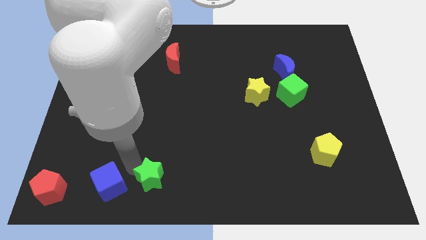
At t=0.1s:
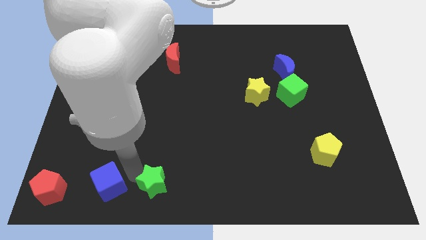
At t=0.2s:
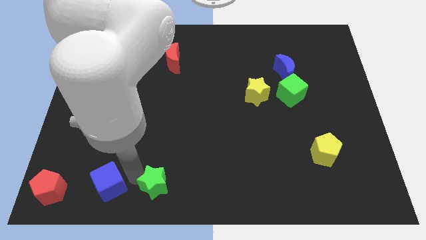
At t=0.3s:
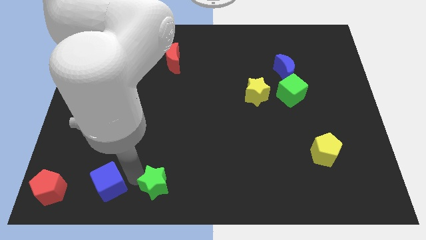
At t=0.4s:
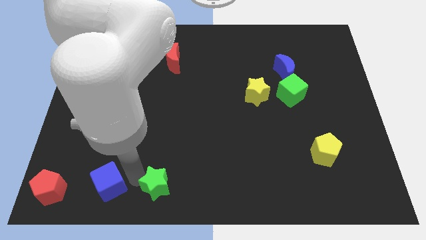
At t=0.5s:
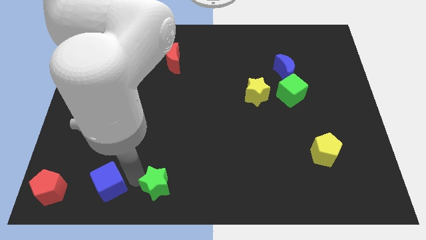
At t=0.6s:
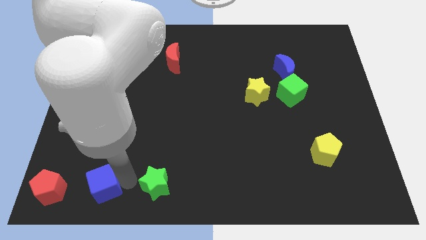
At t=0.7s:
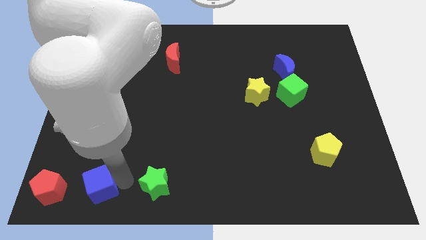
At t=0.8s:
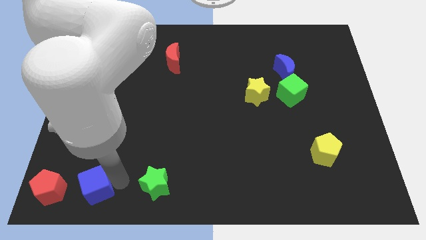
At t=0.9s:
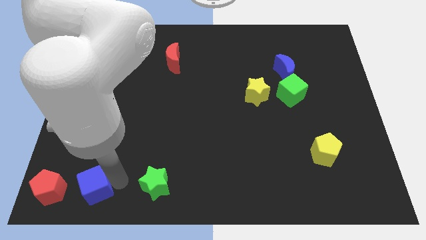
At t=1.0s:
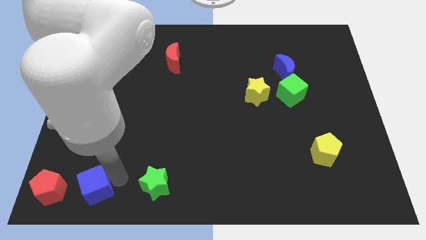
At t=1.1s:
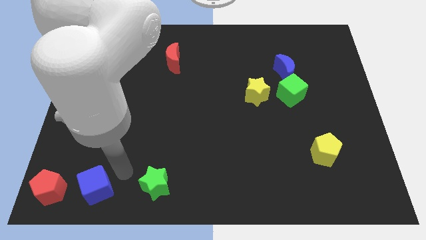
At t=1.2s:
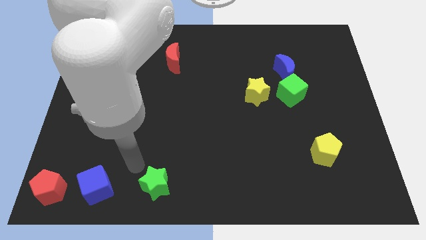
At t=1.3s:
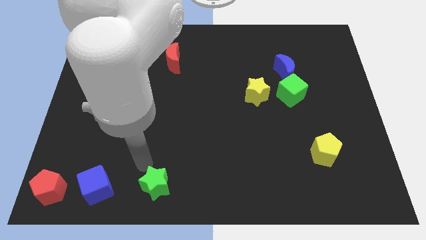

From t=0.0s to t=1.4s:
adjust the blue cube and green star to form a line

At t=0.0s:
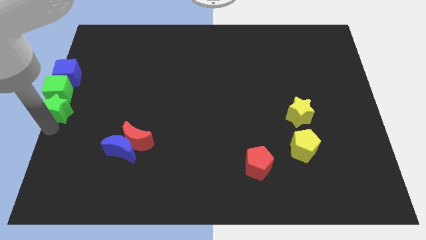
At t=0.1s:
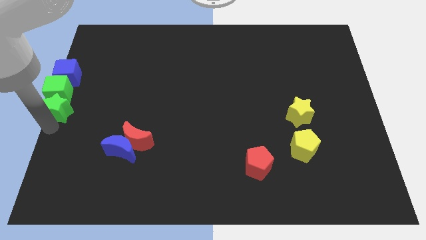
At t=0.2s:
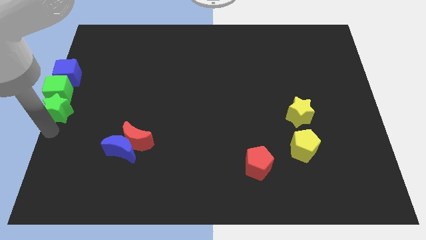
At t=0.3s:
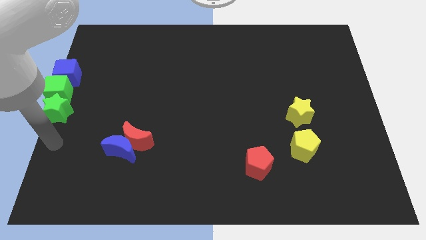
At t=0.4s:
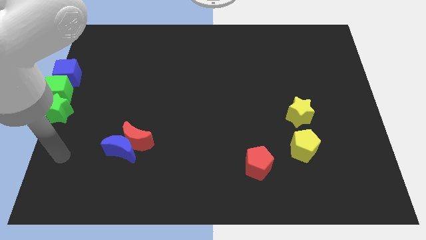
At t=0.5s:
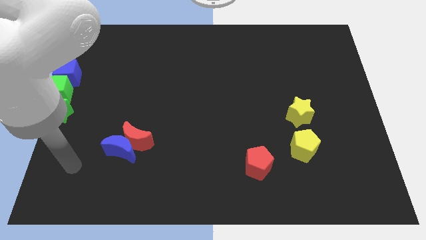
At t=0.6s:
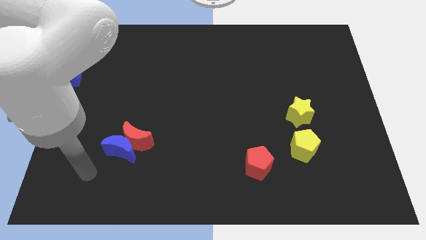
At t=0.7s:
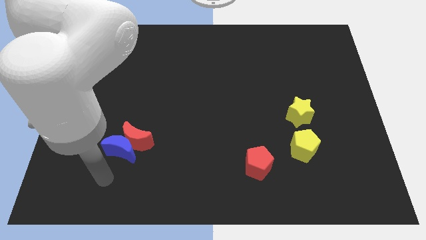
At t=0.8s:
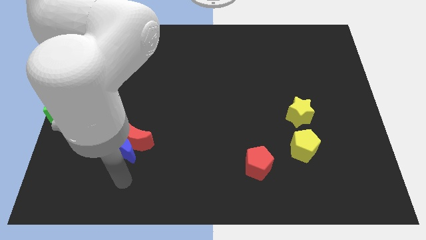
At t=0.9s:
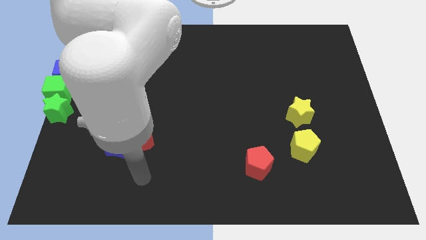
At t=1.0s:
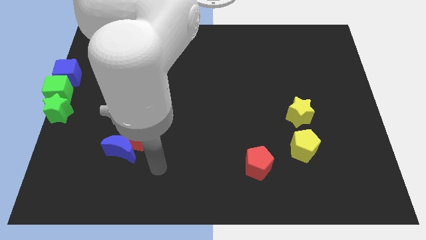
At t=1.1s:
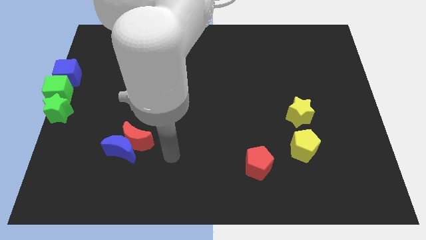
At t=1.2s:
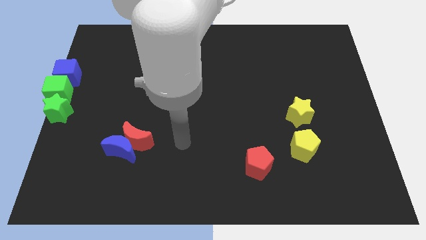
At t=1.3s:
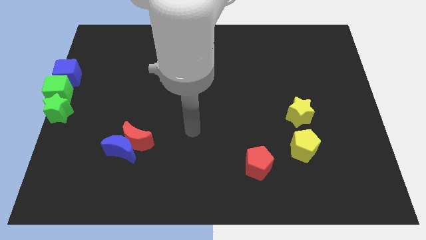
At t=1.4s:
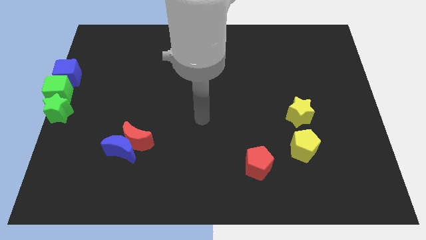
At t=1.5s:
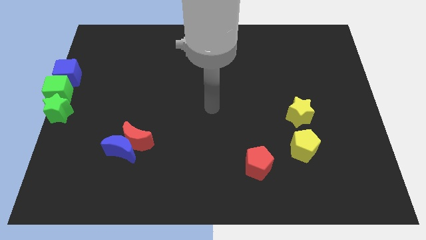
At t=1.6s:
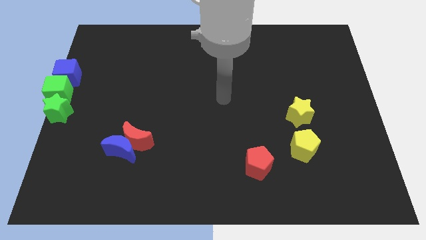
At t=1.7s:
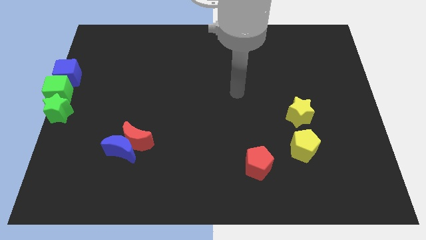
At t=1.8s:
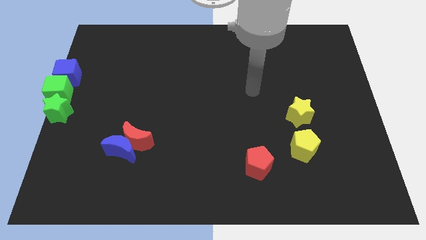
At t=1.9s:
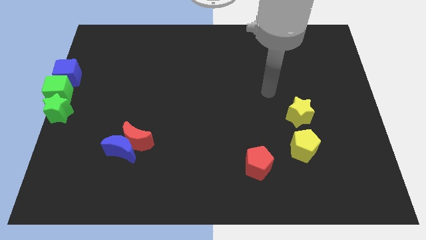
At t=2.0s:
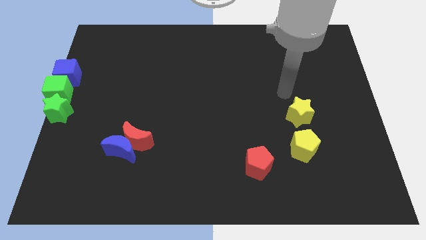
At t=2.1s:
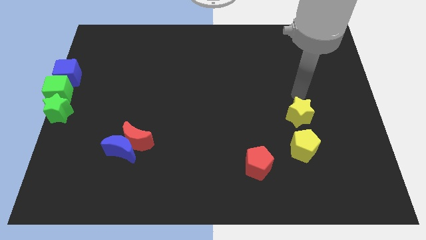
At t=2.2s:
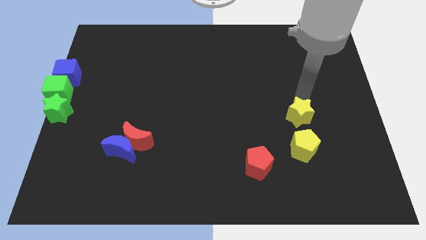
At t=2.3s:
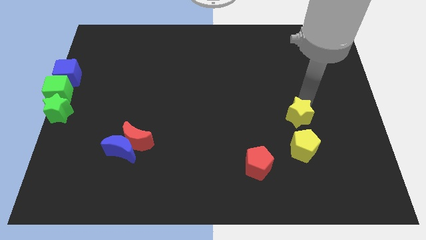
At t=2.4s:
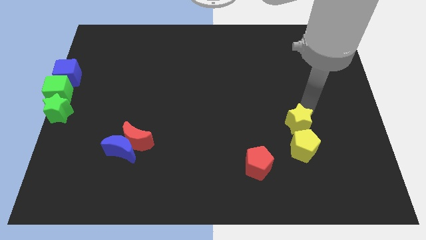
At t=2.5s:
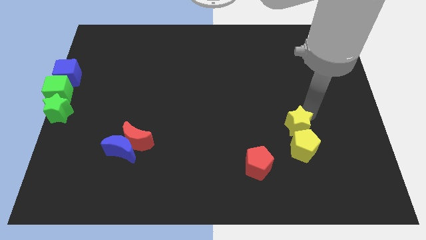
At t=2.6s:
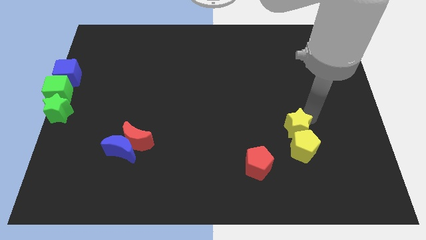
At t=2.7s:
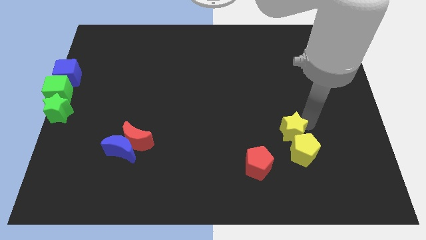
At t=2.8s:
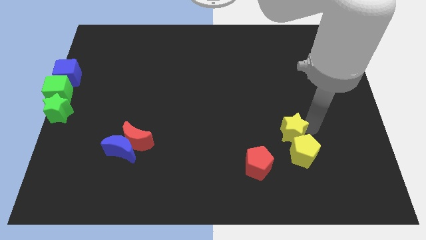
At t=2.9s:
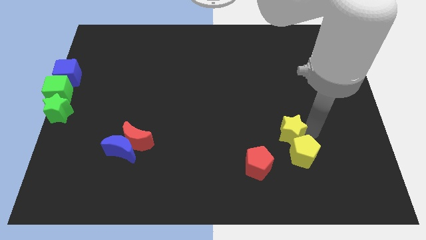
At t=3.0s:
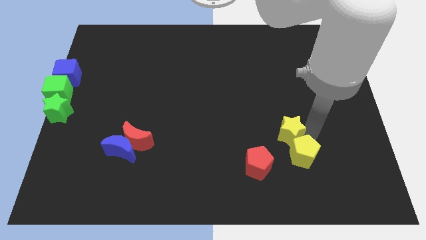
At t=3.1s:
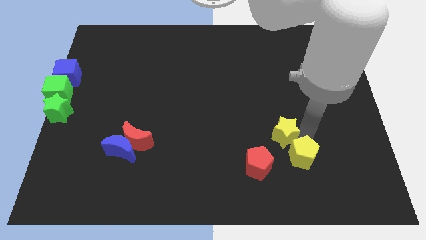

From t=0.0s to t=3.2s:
move your arm and slightly push the yellow star

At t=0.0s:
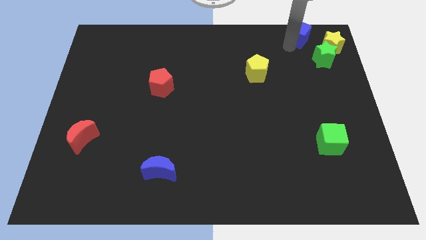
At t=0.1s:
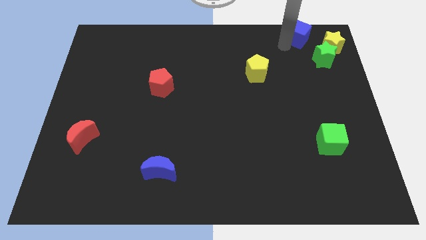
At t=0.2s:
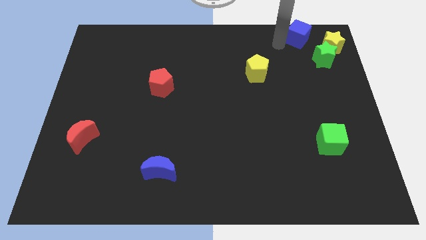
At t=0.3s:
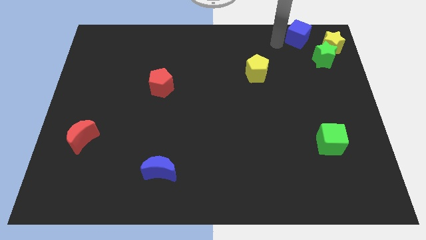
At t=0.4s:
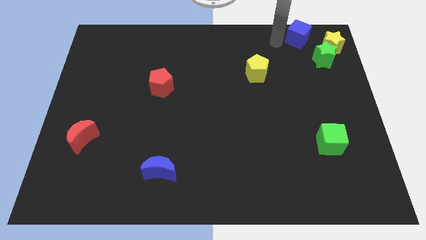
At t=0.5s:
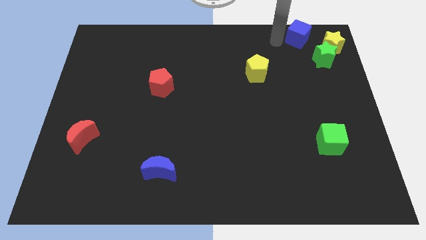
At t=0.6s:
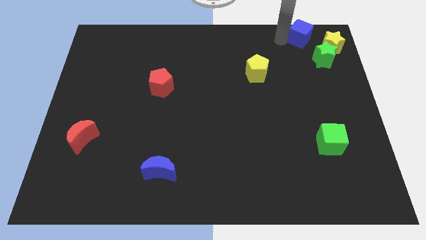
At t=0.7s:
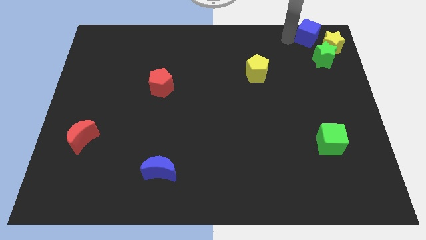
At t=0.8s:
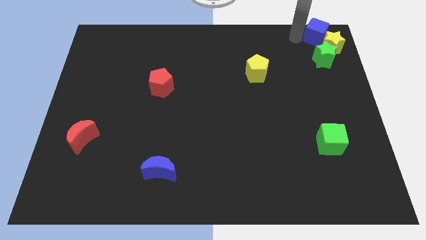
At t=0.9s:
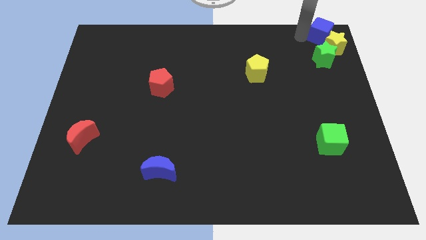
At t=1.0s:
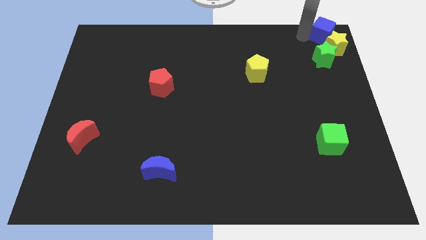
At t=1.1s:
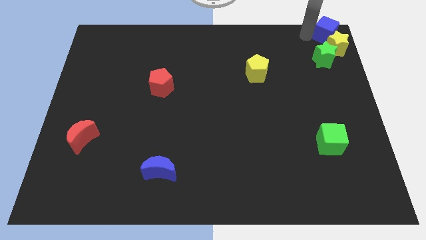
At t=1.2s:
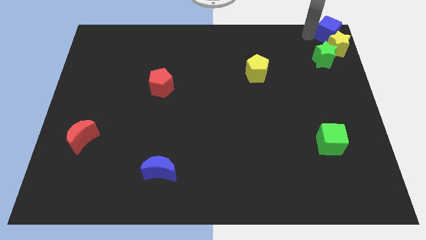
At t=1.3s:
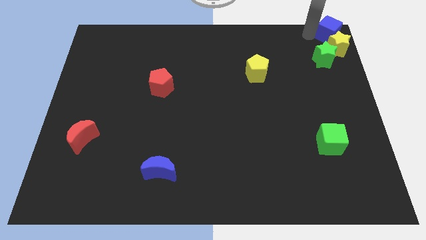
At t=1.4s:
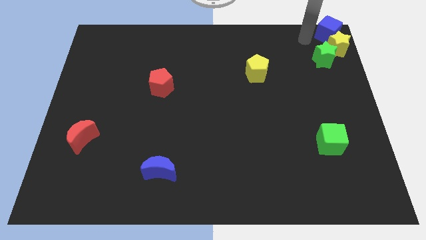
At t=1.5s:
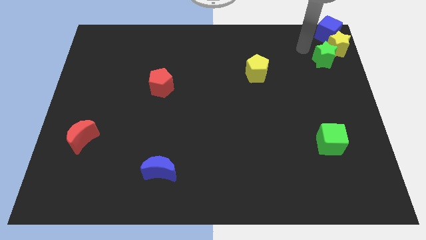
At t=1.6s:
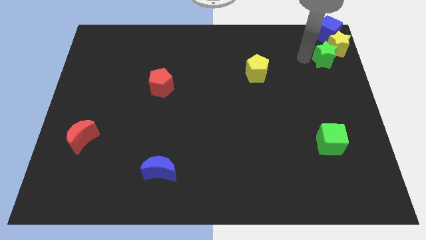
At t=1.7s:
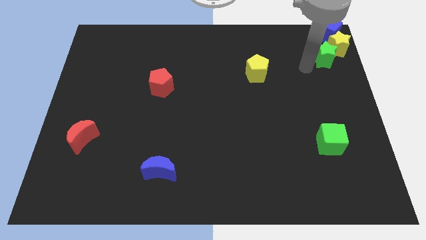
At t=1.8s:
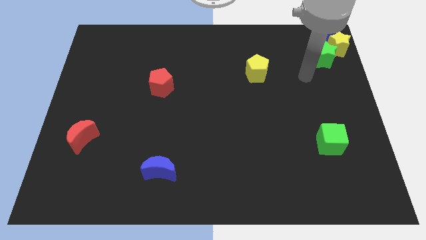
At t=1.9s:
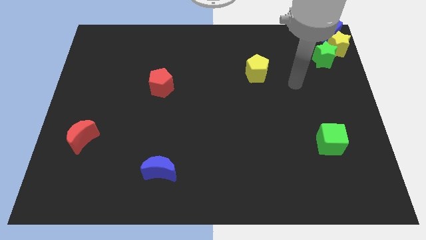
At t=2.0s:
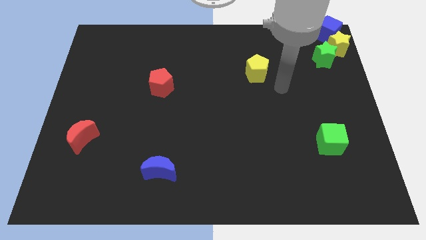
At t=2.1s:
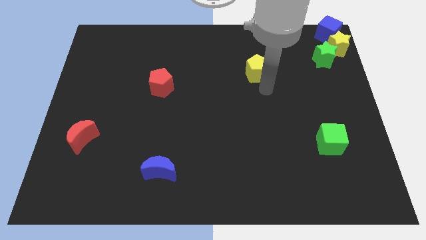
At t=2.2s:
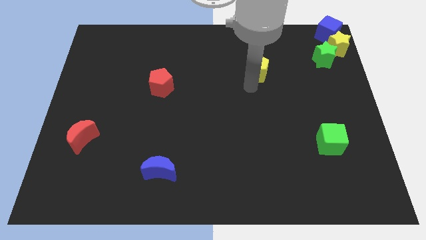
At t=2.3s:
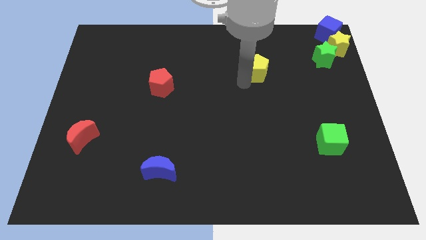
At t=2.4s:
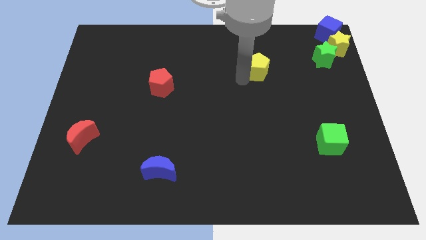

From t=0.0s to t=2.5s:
push the blue cube to the top right corner

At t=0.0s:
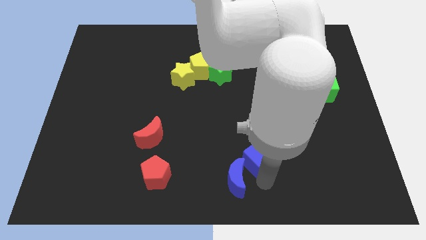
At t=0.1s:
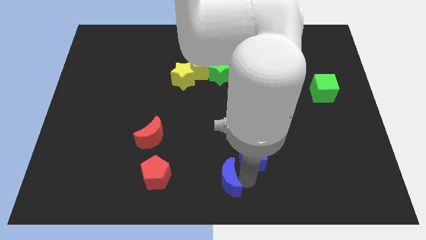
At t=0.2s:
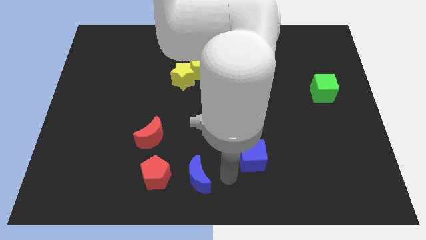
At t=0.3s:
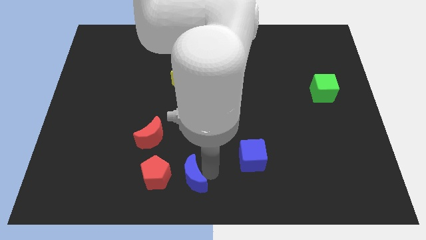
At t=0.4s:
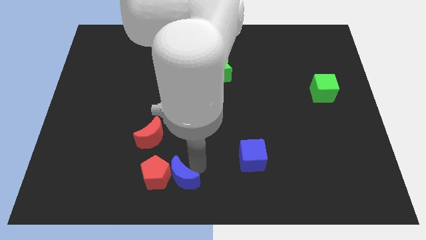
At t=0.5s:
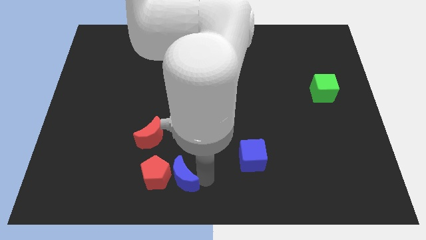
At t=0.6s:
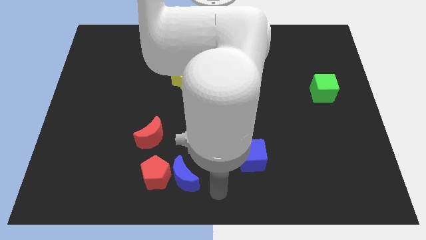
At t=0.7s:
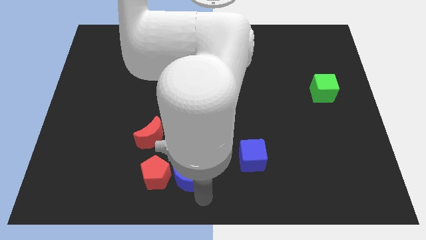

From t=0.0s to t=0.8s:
move the blue crescent into the red pentagon

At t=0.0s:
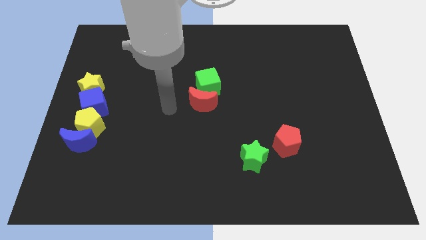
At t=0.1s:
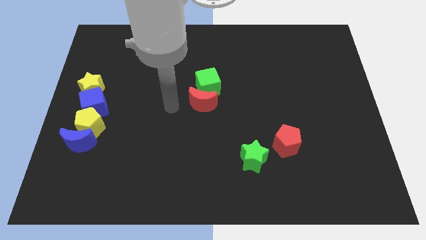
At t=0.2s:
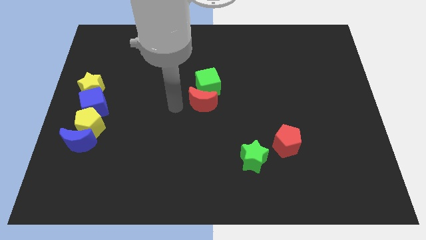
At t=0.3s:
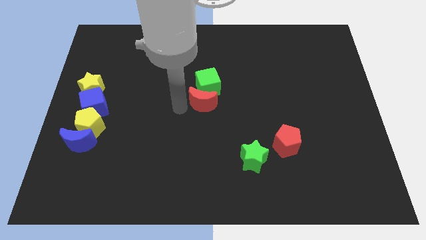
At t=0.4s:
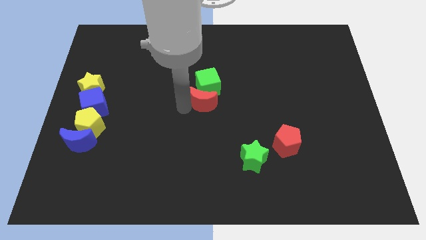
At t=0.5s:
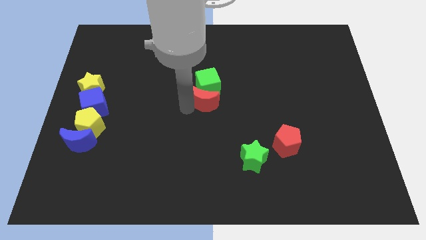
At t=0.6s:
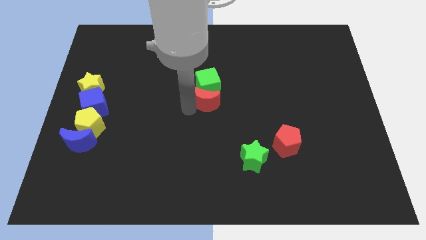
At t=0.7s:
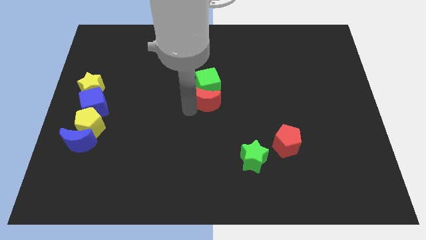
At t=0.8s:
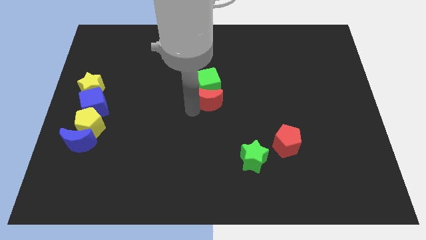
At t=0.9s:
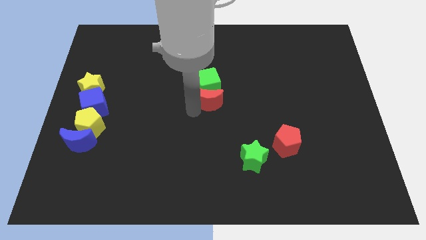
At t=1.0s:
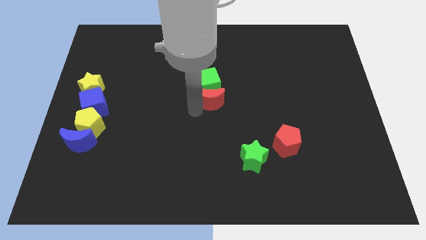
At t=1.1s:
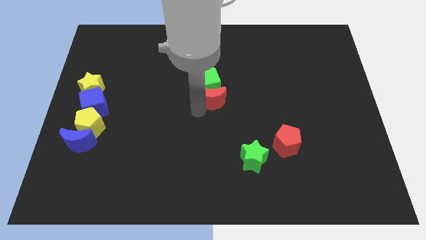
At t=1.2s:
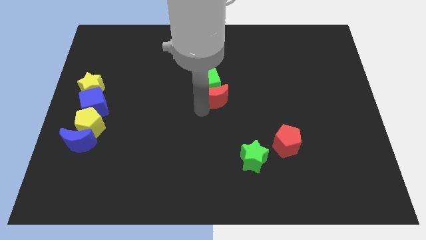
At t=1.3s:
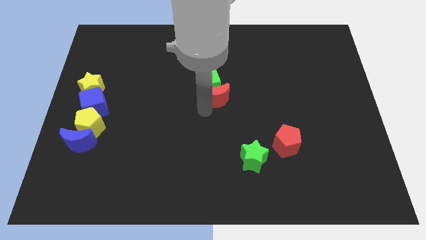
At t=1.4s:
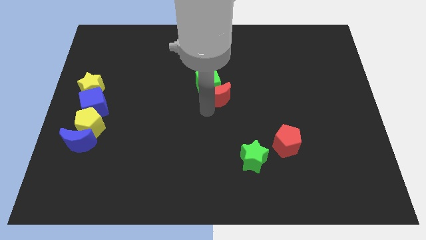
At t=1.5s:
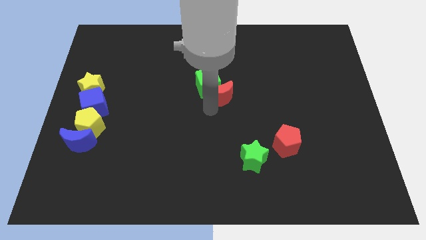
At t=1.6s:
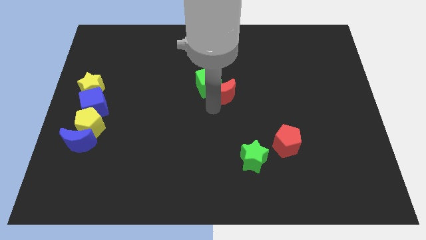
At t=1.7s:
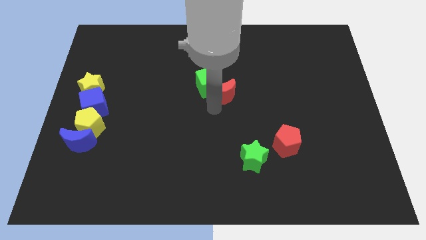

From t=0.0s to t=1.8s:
put the green cube and red crescent at the center of the board
